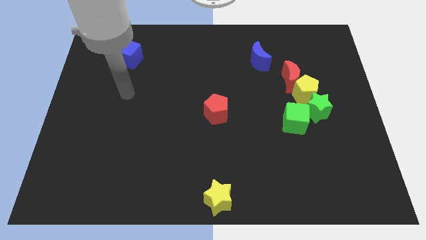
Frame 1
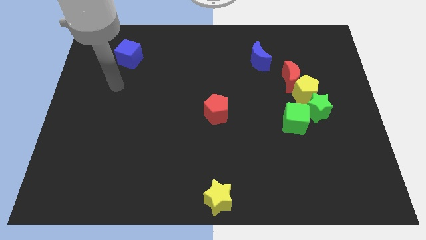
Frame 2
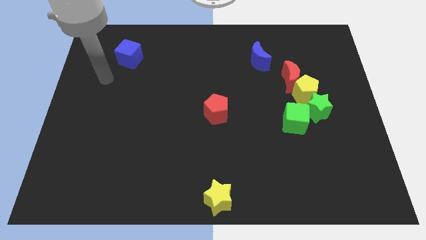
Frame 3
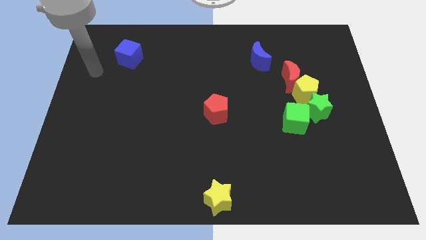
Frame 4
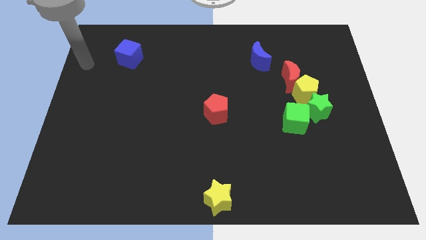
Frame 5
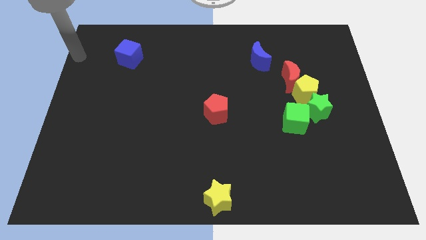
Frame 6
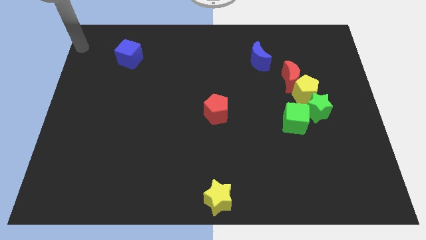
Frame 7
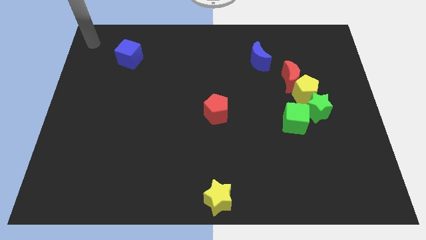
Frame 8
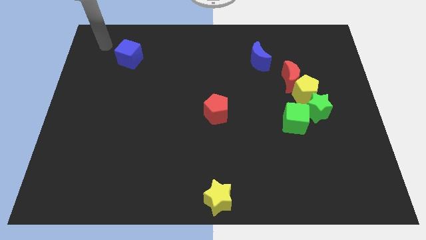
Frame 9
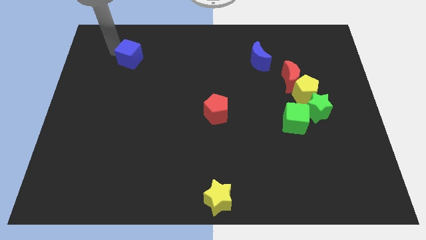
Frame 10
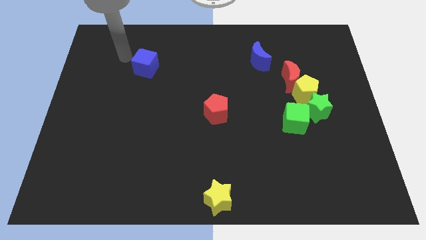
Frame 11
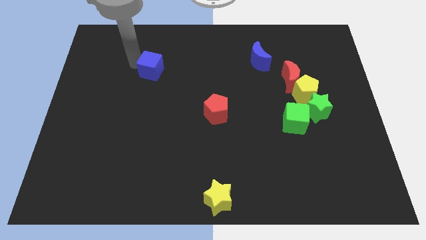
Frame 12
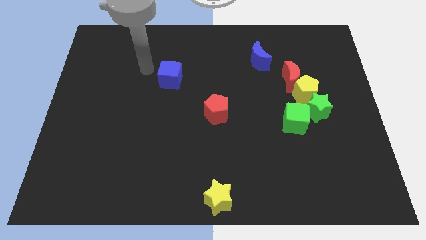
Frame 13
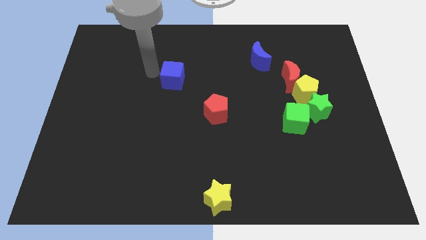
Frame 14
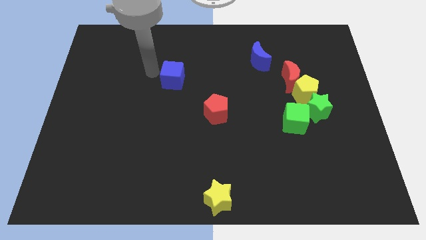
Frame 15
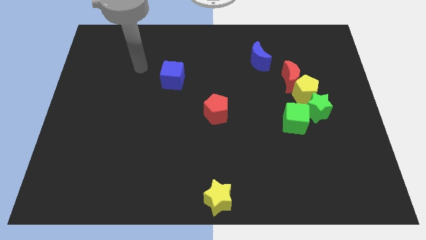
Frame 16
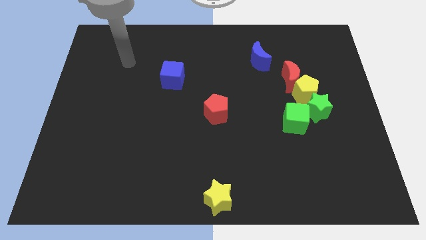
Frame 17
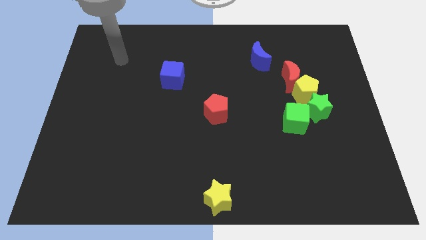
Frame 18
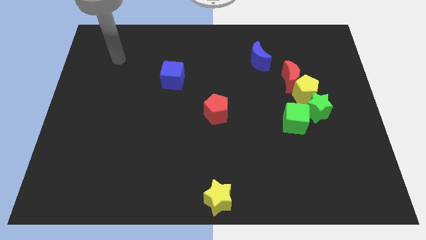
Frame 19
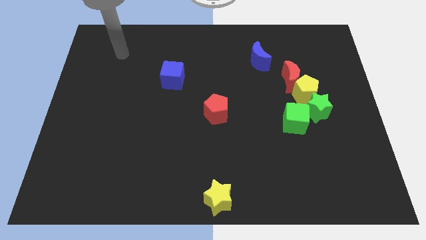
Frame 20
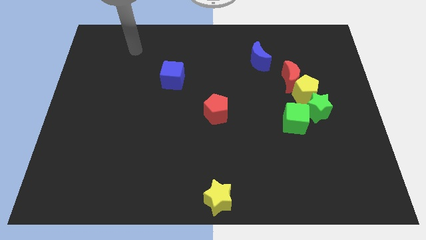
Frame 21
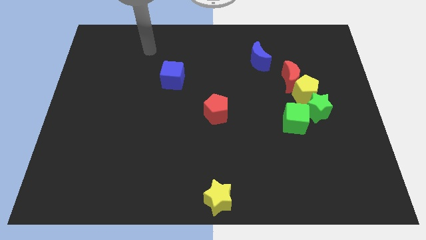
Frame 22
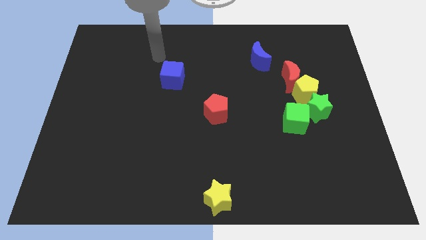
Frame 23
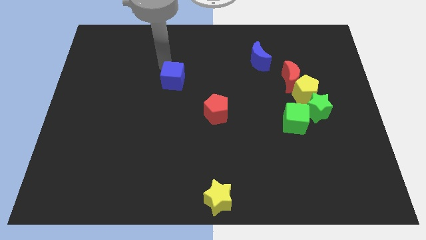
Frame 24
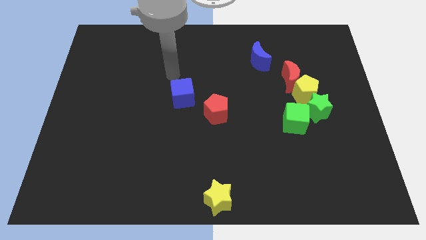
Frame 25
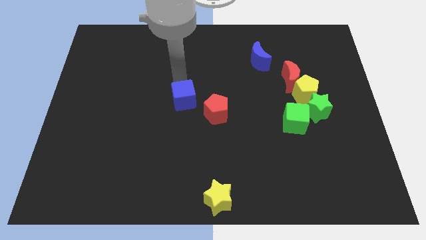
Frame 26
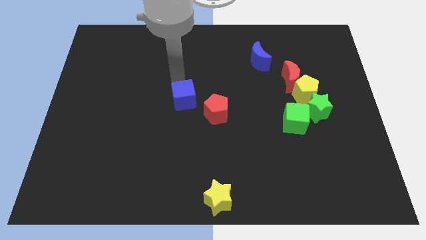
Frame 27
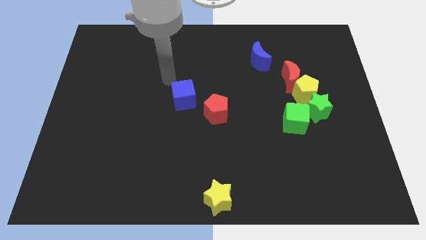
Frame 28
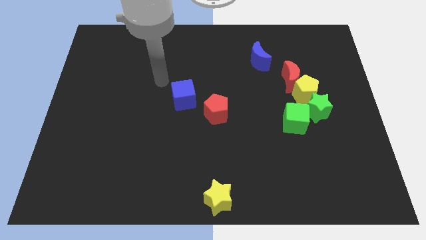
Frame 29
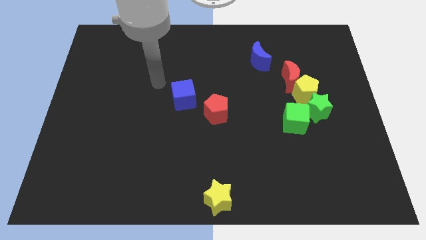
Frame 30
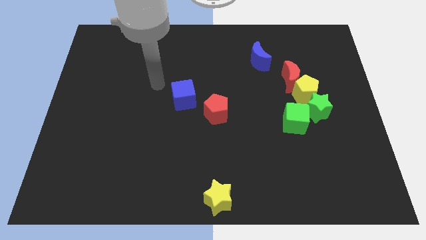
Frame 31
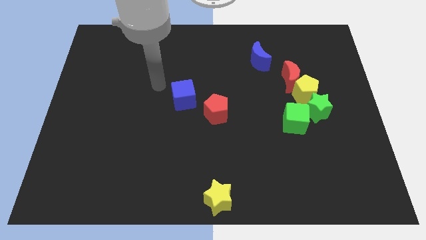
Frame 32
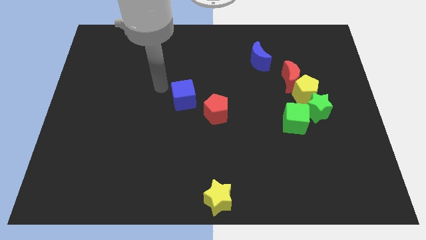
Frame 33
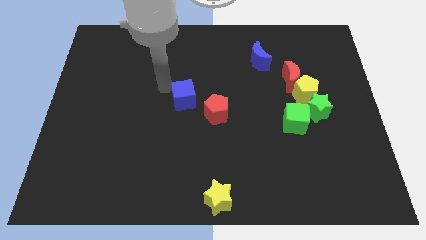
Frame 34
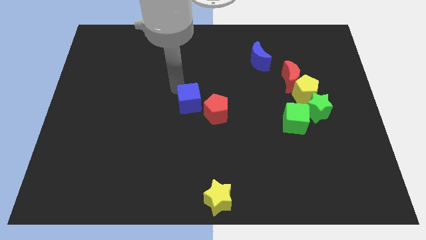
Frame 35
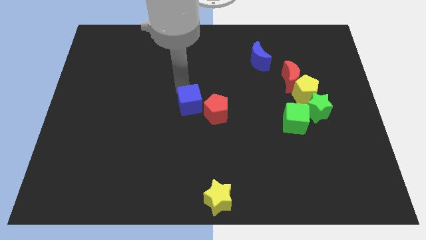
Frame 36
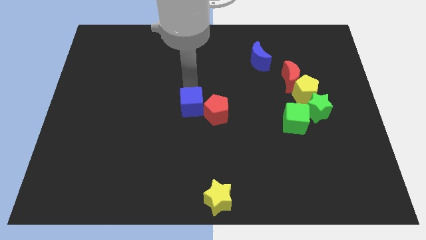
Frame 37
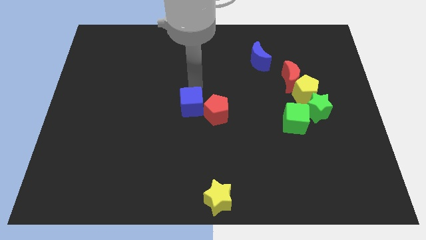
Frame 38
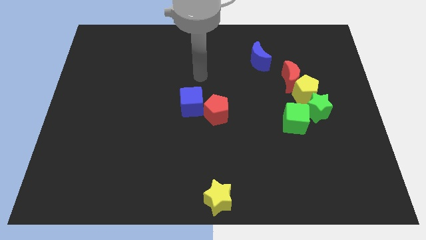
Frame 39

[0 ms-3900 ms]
move the blue cube to the top left of the red pentagon

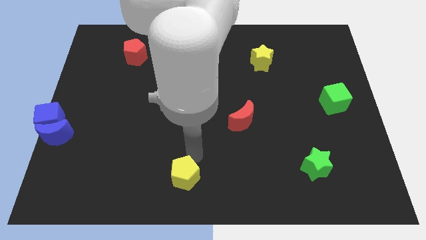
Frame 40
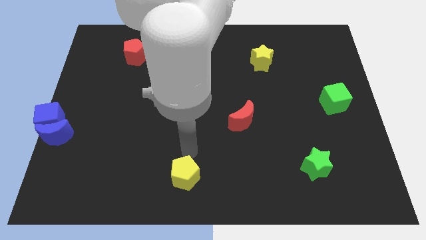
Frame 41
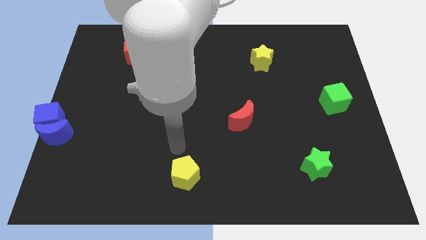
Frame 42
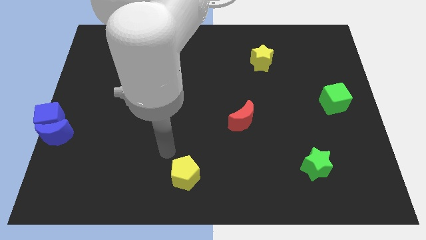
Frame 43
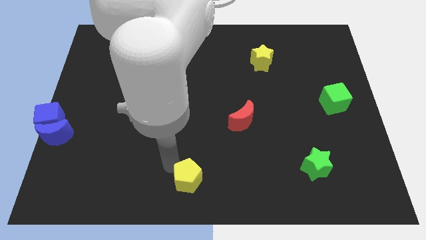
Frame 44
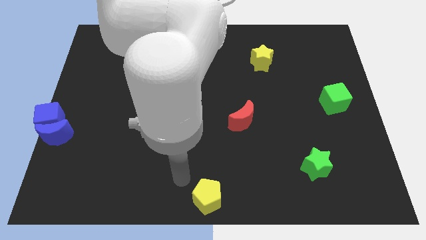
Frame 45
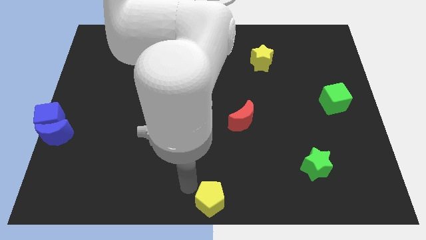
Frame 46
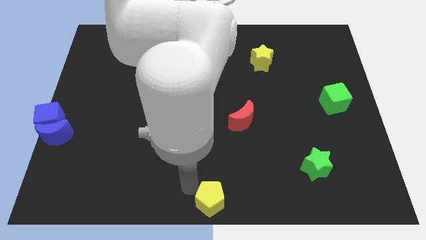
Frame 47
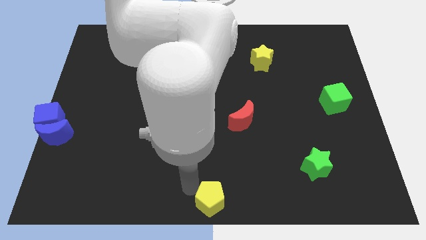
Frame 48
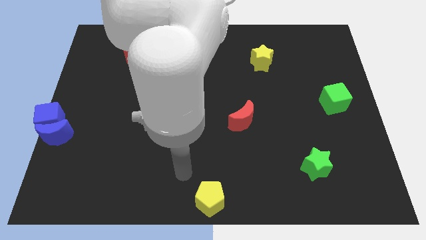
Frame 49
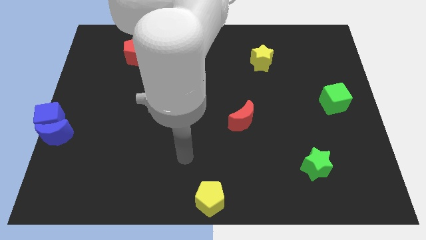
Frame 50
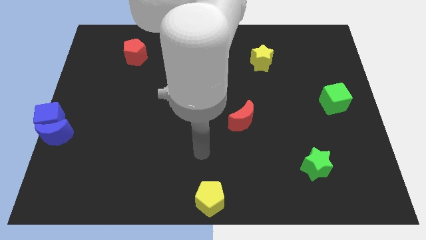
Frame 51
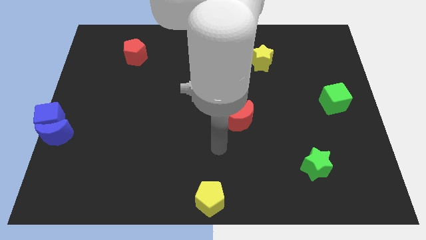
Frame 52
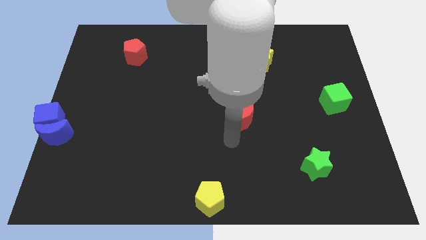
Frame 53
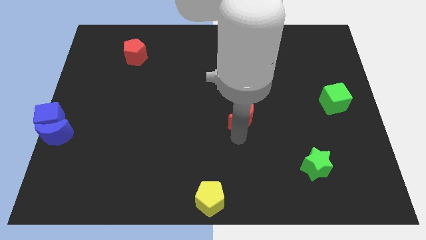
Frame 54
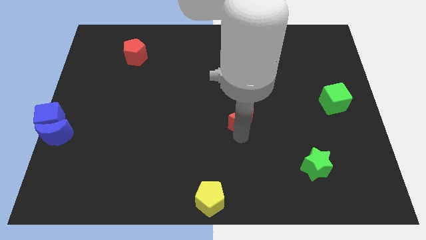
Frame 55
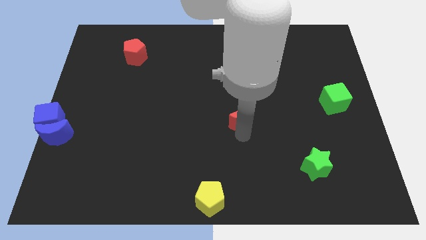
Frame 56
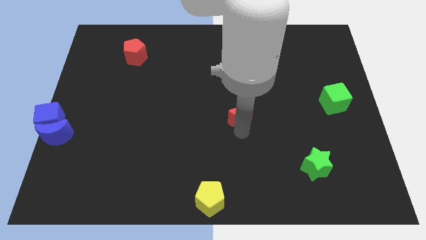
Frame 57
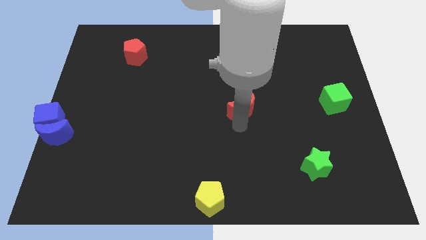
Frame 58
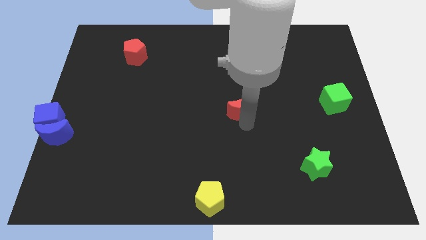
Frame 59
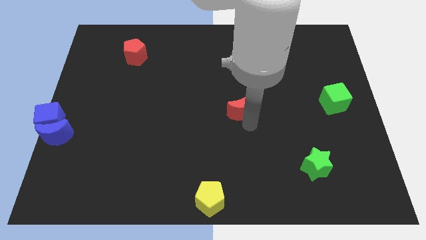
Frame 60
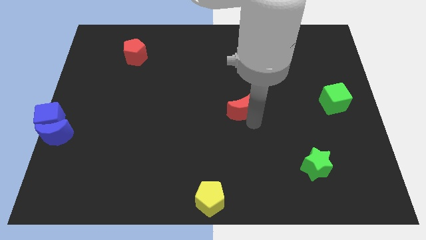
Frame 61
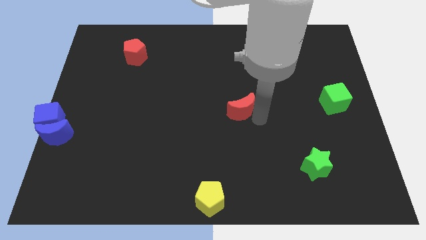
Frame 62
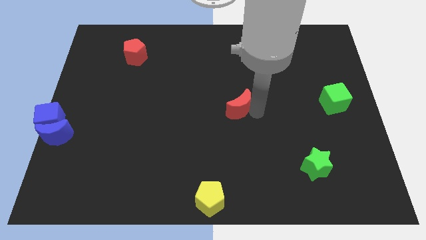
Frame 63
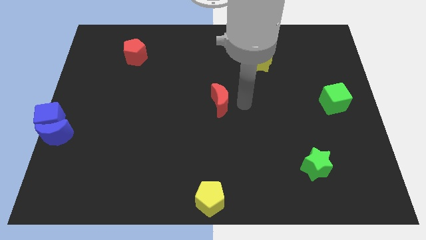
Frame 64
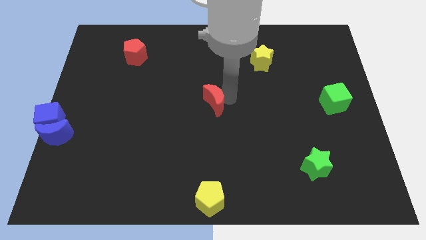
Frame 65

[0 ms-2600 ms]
place the red crescent above the yellow pentagon

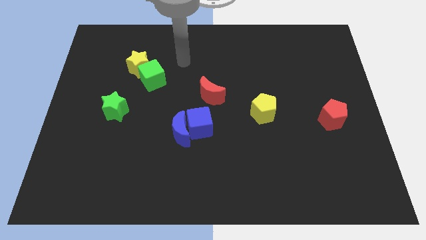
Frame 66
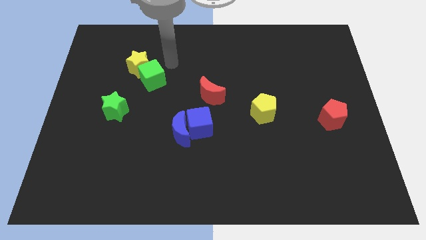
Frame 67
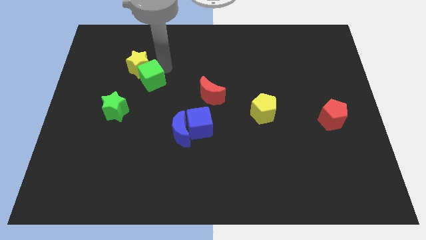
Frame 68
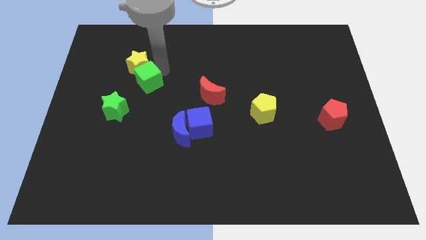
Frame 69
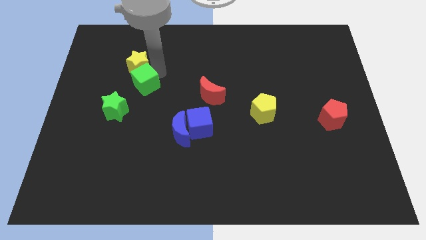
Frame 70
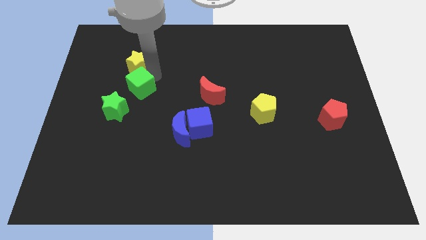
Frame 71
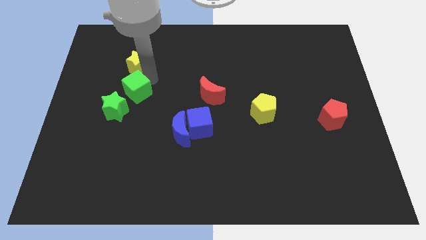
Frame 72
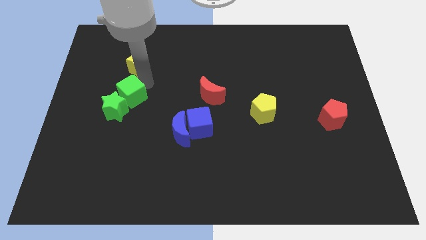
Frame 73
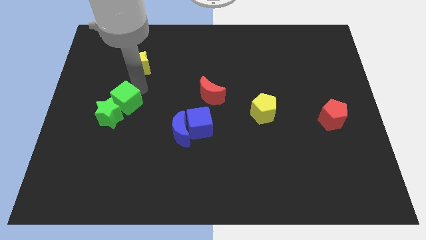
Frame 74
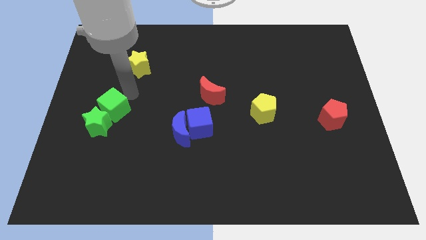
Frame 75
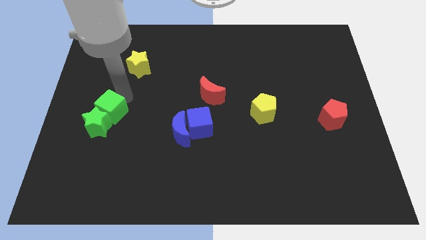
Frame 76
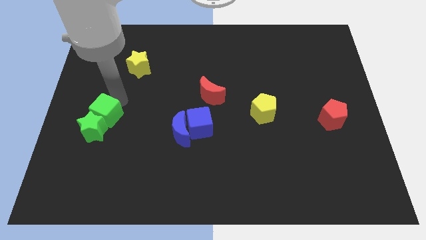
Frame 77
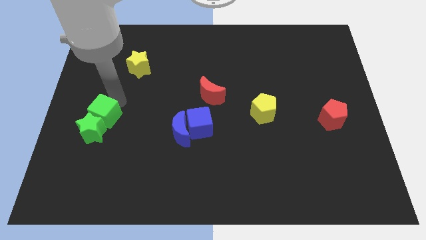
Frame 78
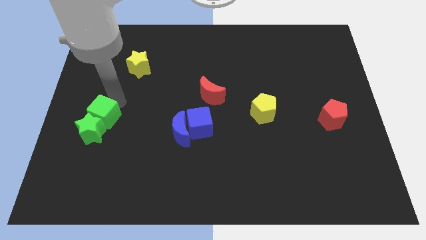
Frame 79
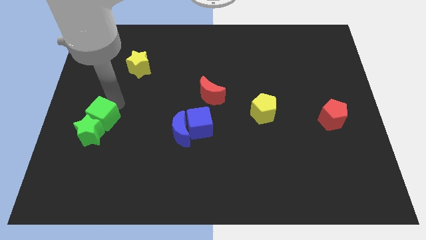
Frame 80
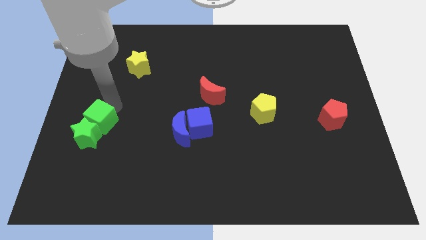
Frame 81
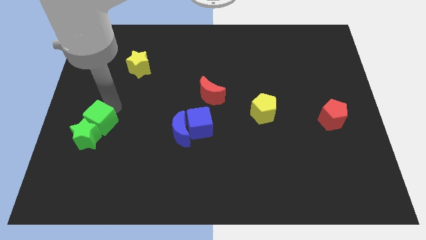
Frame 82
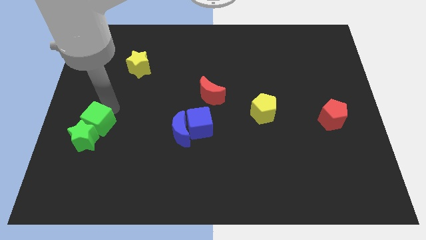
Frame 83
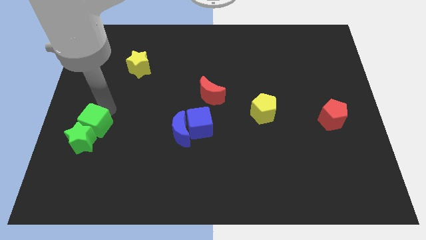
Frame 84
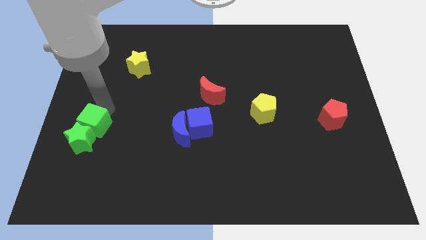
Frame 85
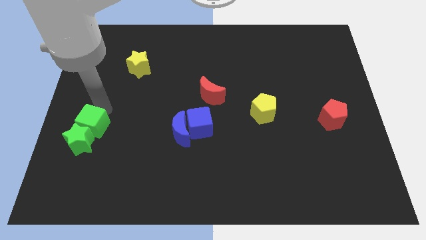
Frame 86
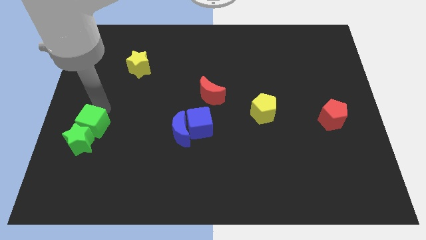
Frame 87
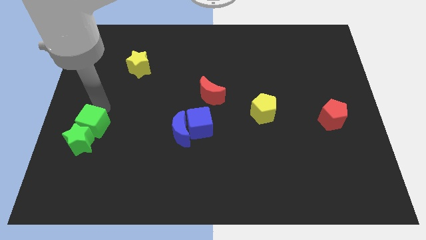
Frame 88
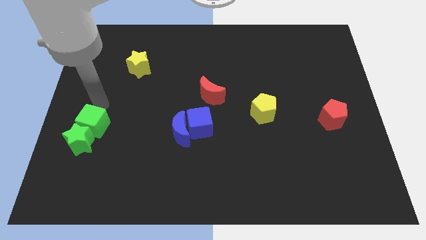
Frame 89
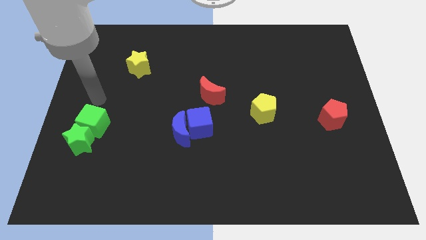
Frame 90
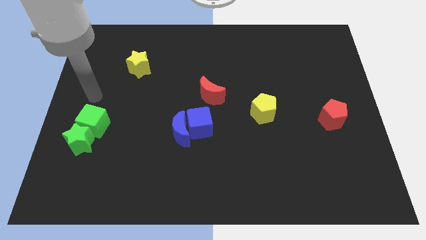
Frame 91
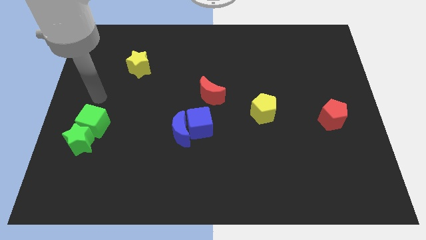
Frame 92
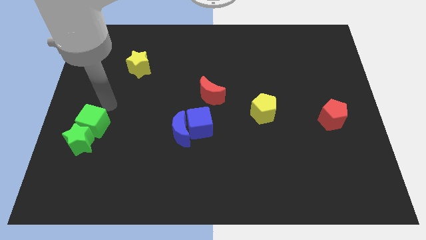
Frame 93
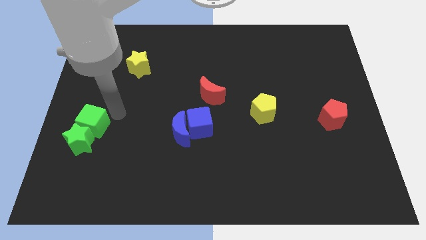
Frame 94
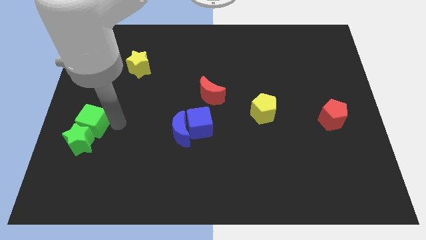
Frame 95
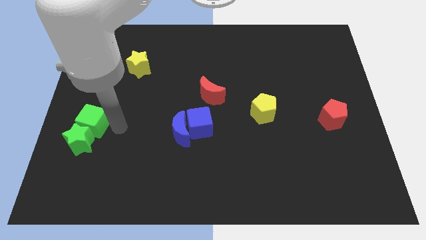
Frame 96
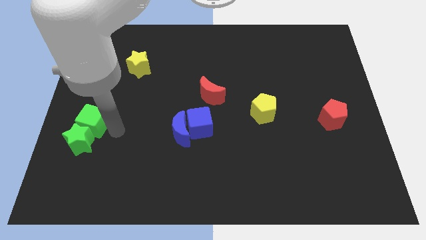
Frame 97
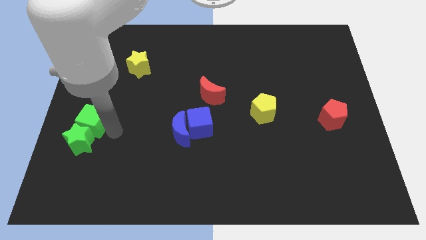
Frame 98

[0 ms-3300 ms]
move the green cube along with green star towards the bottom left
